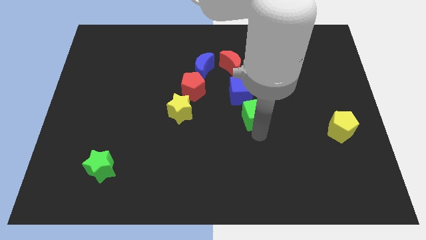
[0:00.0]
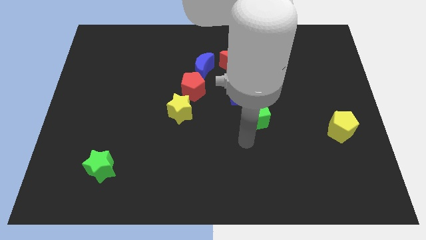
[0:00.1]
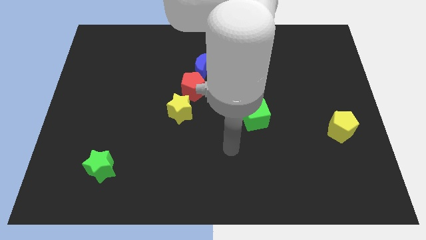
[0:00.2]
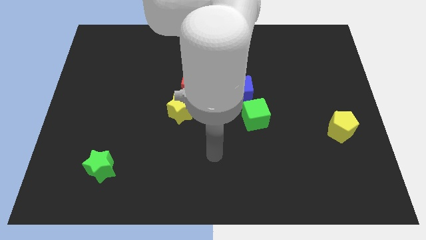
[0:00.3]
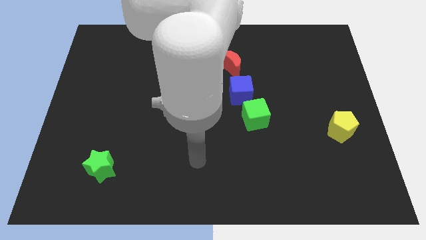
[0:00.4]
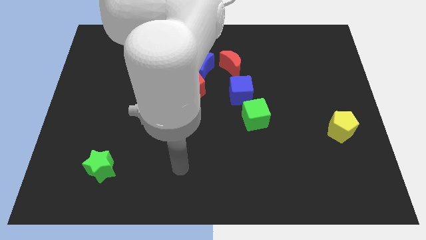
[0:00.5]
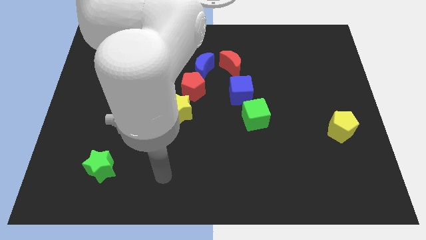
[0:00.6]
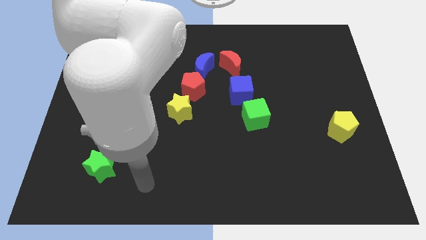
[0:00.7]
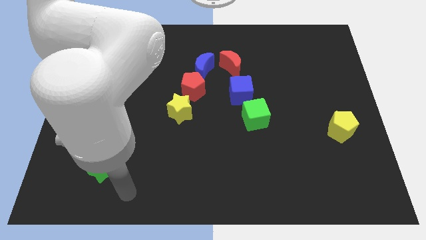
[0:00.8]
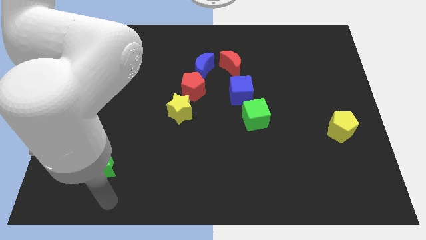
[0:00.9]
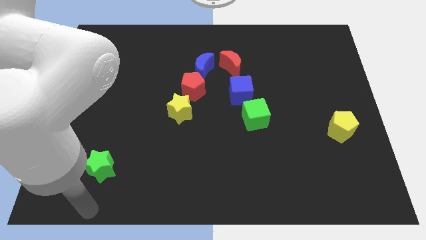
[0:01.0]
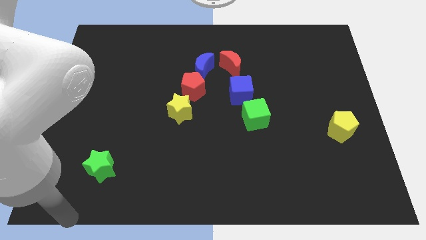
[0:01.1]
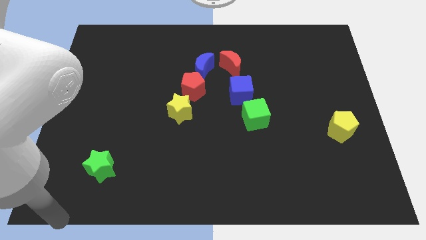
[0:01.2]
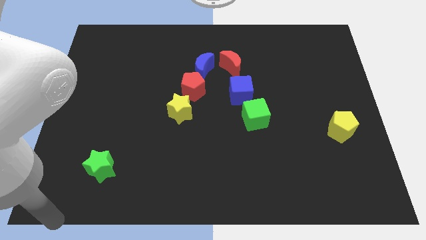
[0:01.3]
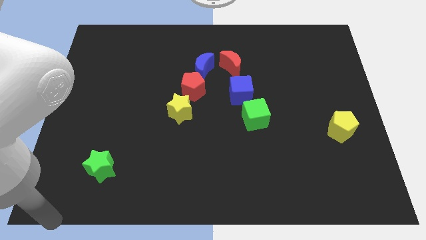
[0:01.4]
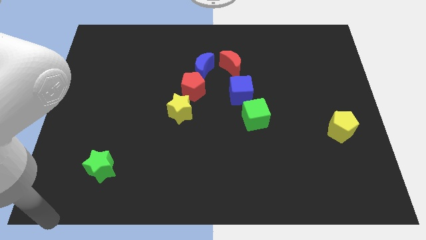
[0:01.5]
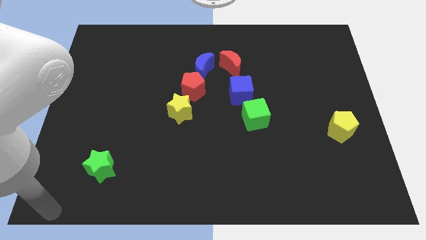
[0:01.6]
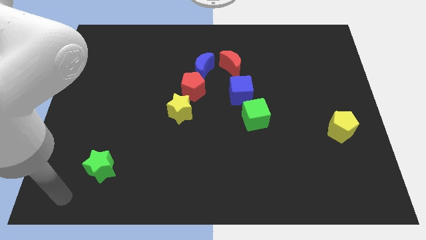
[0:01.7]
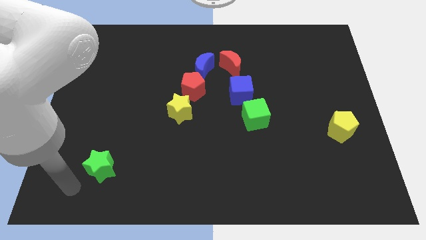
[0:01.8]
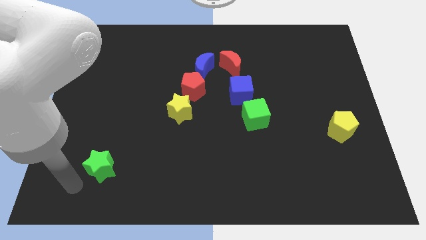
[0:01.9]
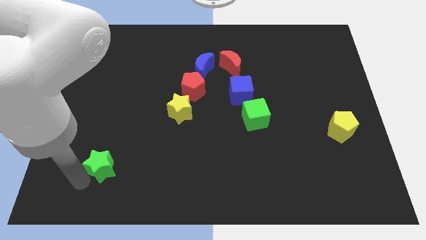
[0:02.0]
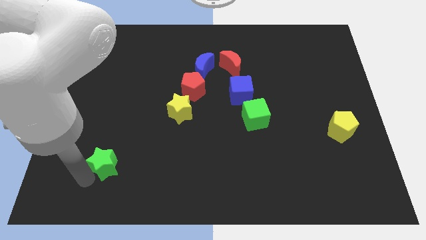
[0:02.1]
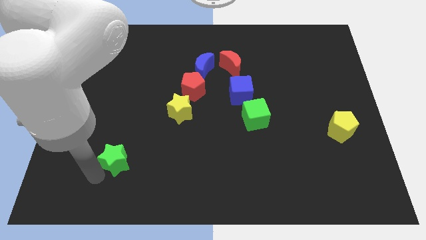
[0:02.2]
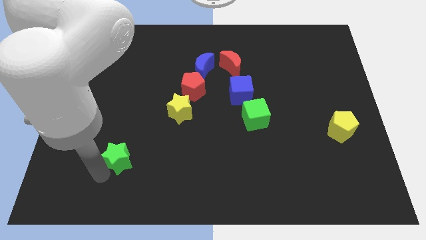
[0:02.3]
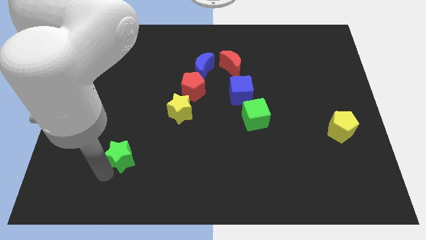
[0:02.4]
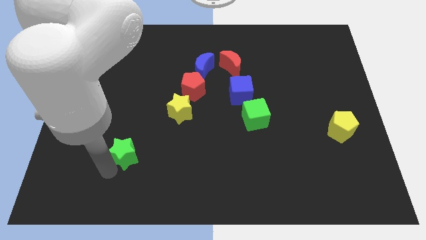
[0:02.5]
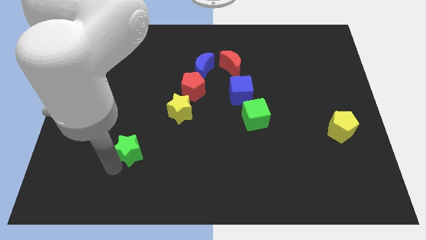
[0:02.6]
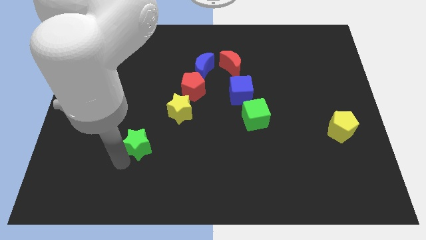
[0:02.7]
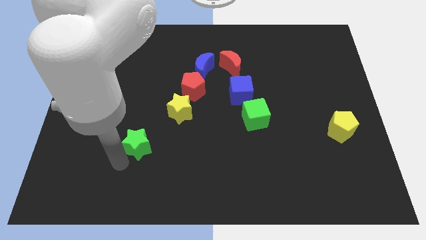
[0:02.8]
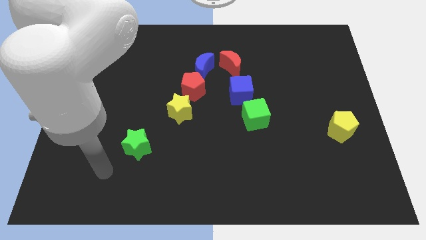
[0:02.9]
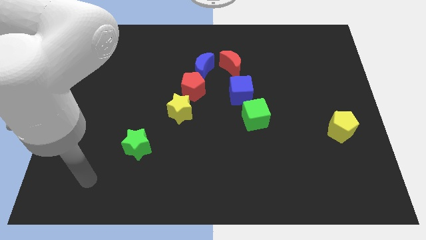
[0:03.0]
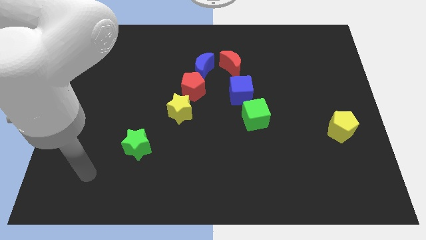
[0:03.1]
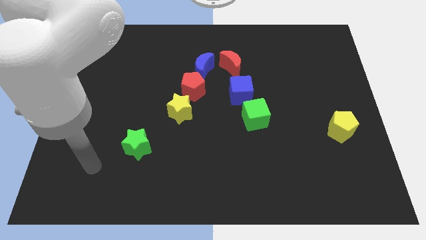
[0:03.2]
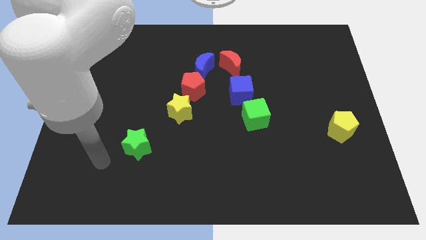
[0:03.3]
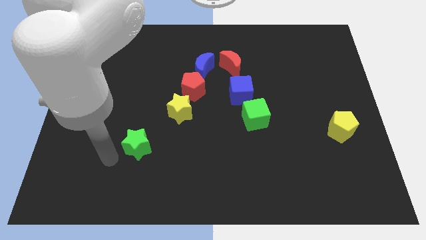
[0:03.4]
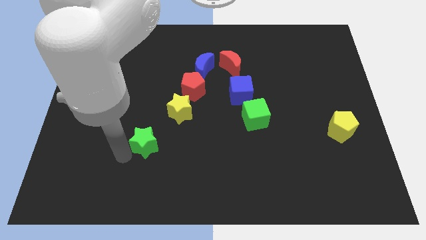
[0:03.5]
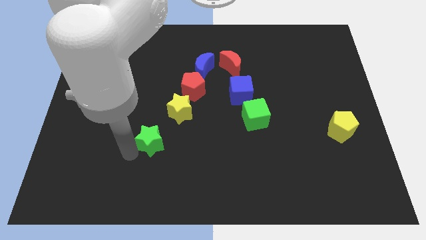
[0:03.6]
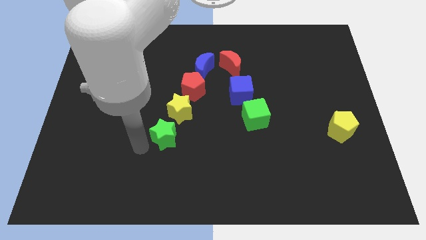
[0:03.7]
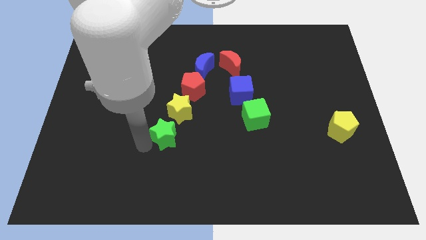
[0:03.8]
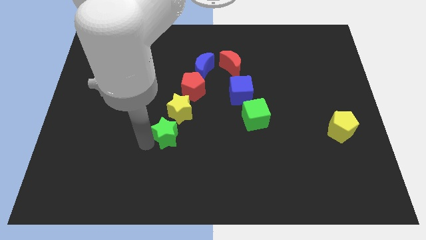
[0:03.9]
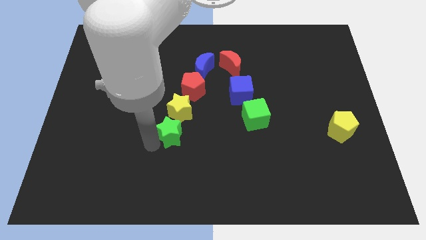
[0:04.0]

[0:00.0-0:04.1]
drag the green star close to the bottom side of teh yellow star

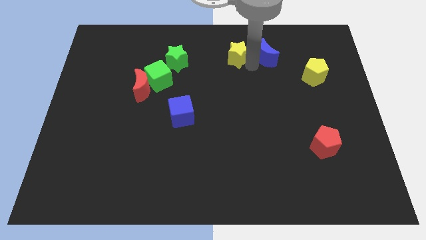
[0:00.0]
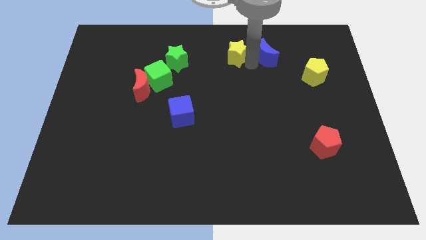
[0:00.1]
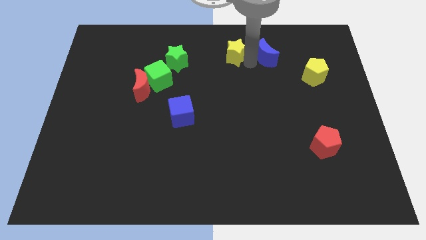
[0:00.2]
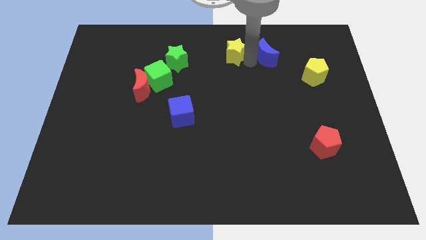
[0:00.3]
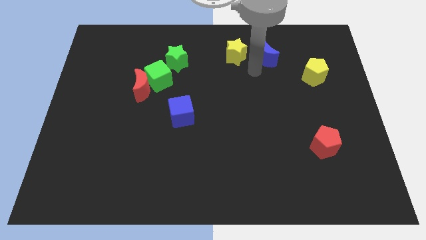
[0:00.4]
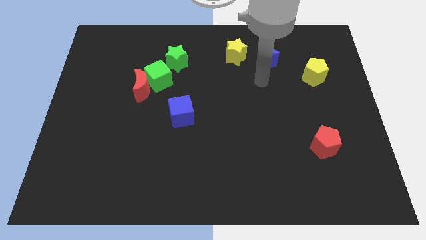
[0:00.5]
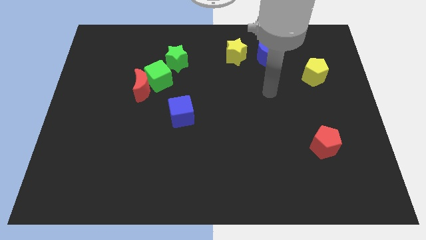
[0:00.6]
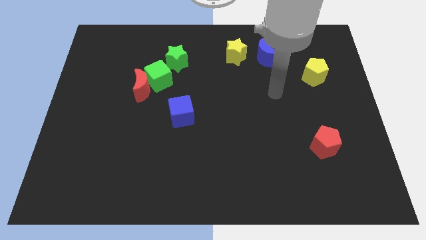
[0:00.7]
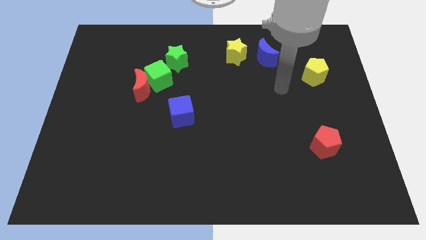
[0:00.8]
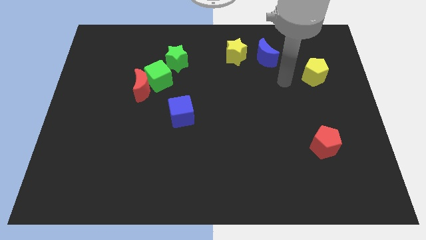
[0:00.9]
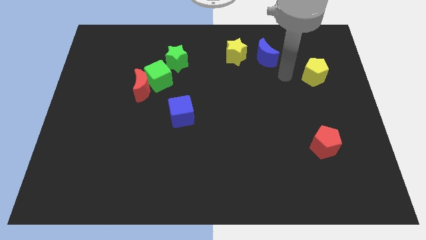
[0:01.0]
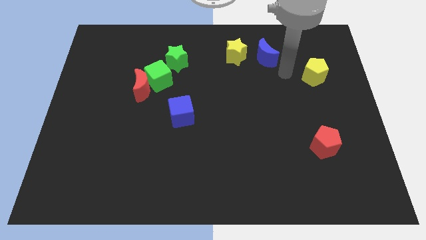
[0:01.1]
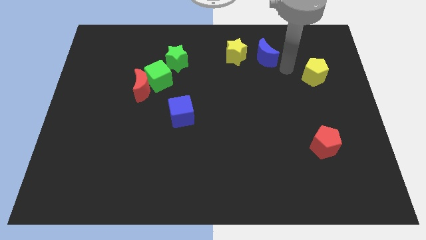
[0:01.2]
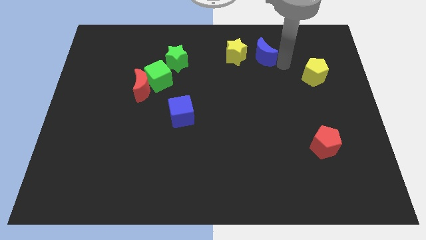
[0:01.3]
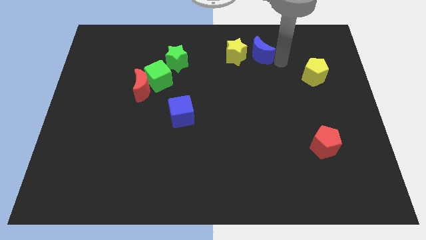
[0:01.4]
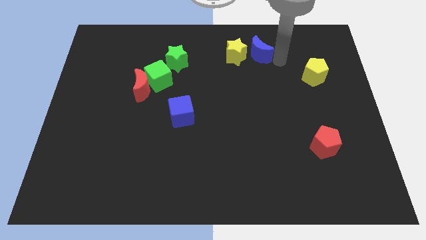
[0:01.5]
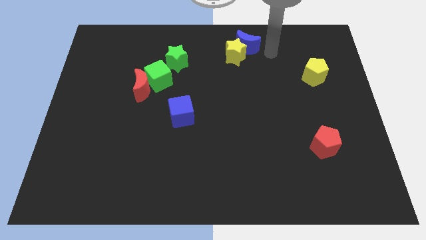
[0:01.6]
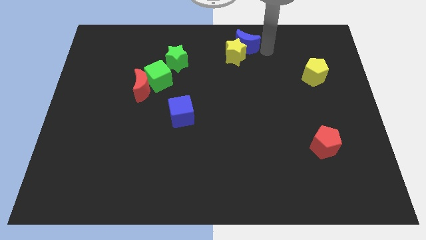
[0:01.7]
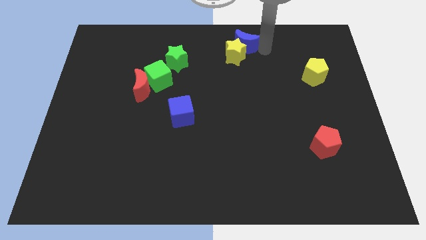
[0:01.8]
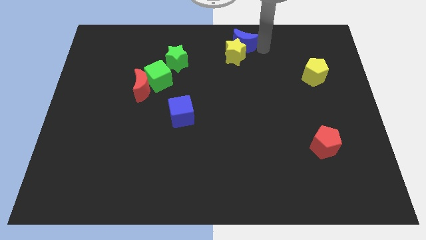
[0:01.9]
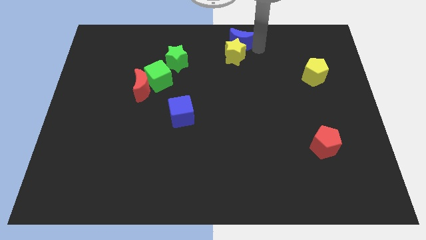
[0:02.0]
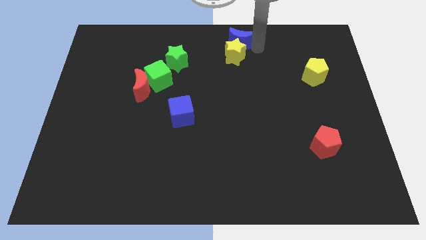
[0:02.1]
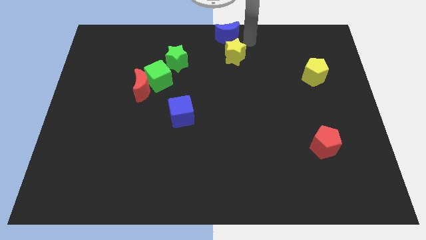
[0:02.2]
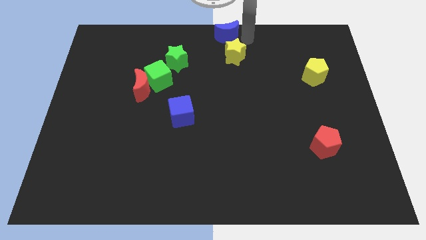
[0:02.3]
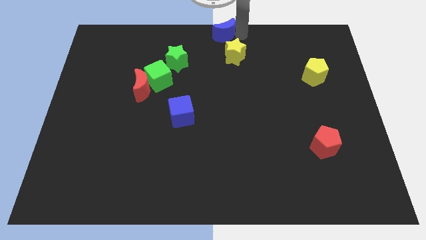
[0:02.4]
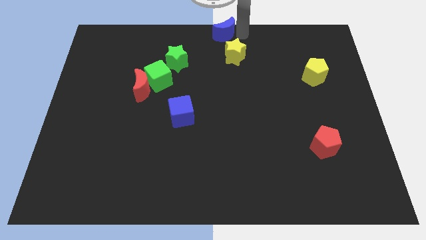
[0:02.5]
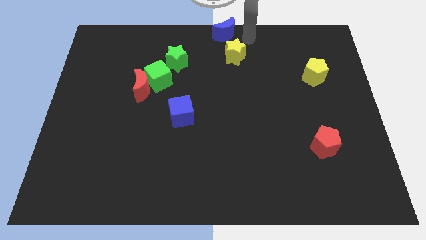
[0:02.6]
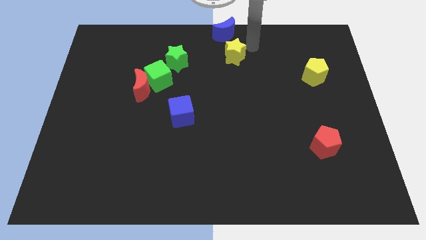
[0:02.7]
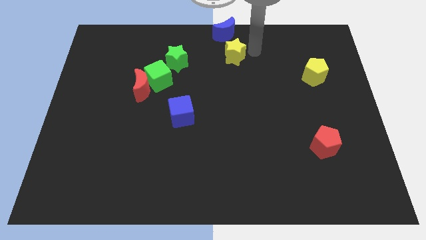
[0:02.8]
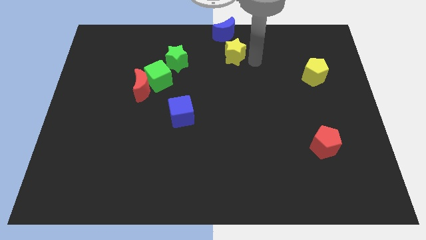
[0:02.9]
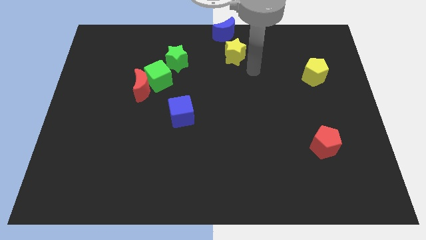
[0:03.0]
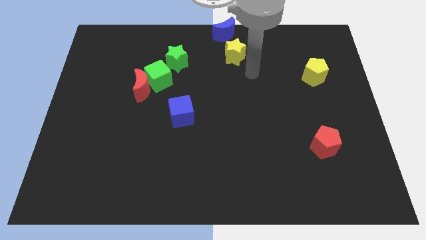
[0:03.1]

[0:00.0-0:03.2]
push the yellow star towards the top center of the board

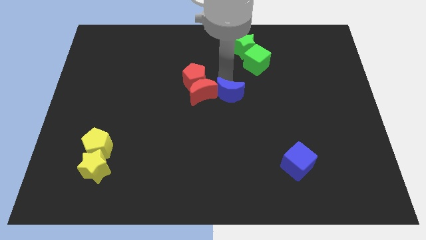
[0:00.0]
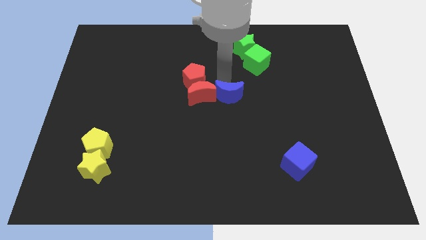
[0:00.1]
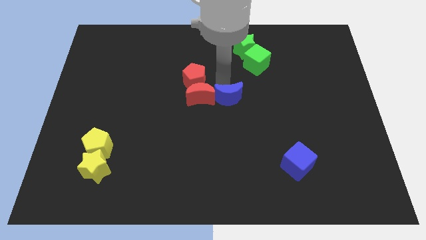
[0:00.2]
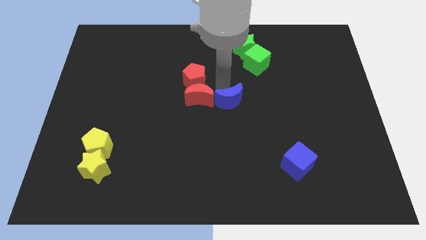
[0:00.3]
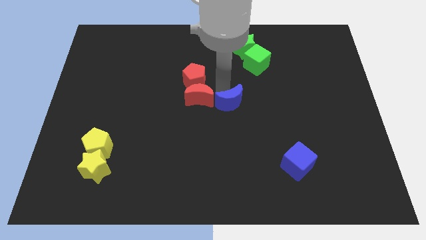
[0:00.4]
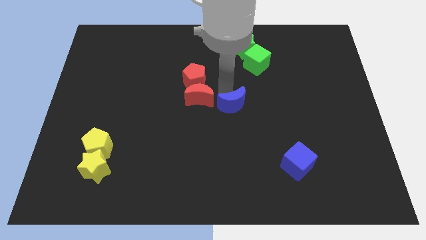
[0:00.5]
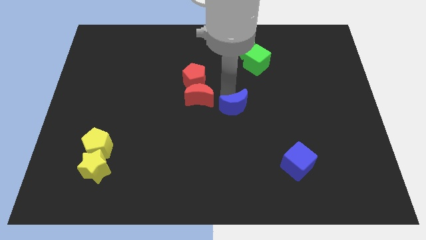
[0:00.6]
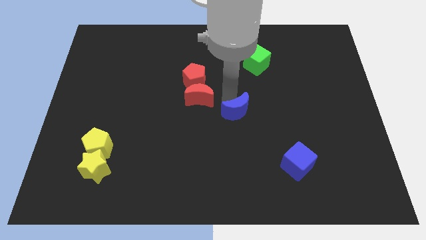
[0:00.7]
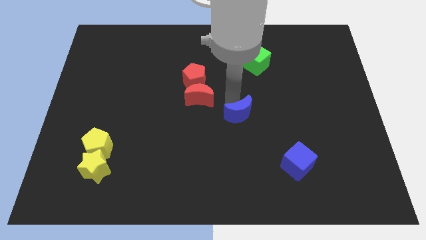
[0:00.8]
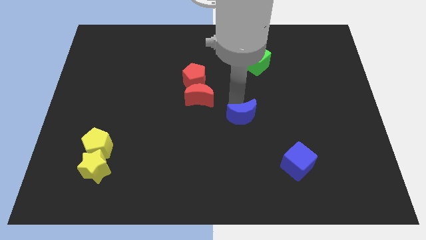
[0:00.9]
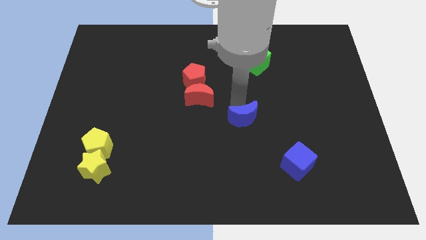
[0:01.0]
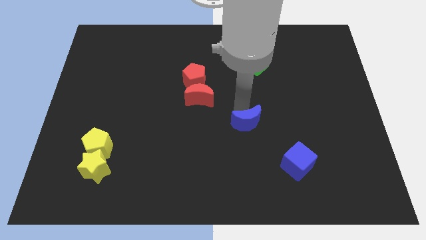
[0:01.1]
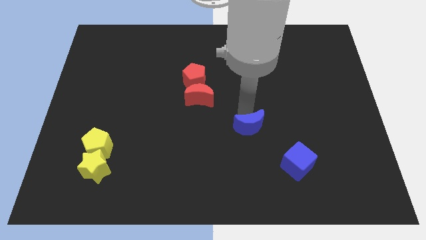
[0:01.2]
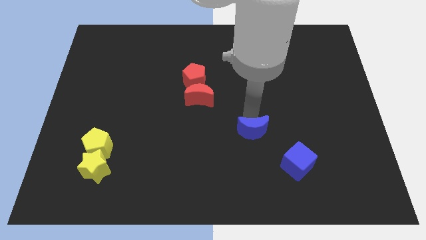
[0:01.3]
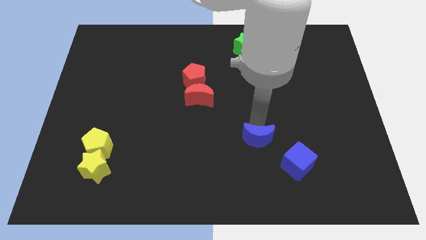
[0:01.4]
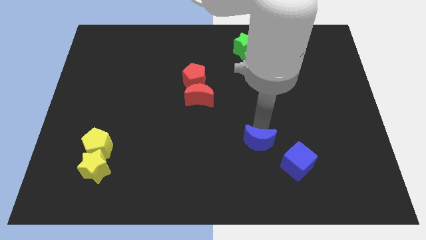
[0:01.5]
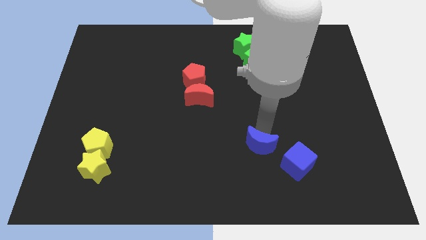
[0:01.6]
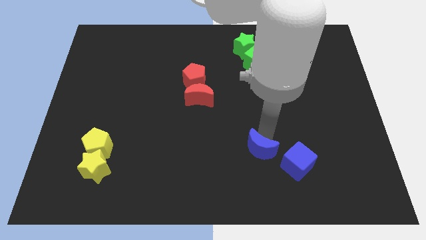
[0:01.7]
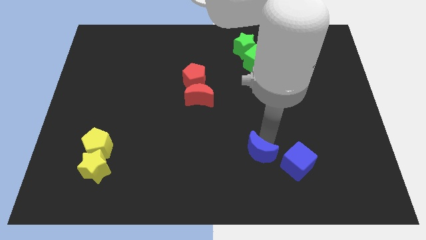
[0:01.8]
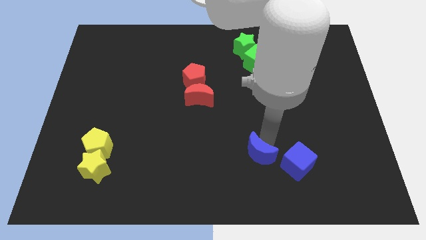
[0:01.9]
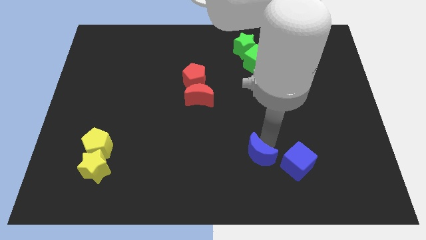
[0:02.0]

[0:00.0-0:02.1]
put the blue crescent beside the blue cube
